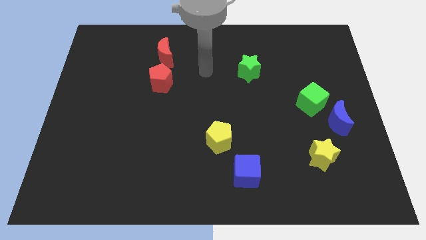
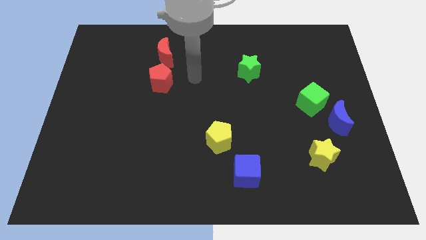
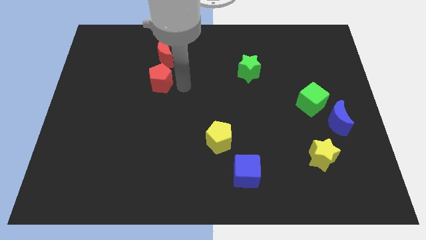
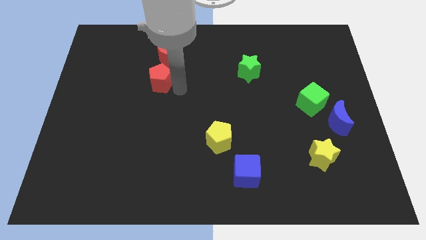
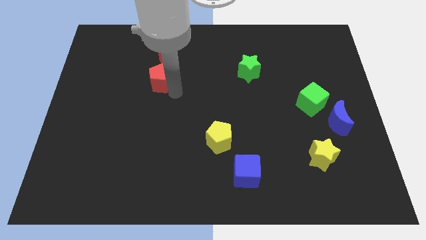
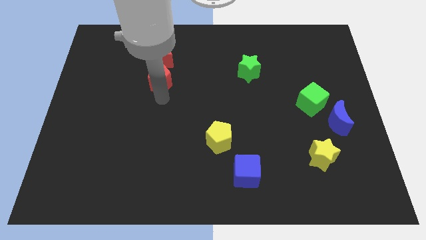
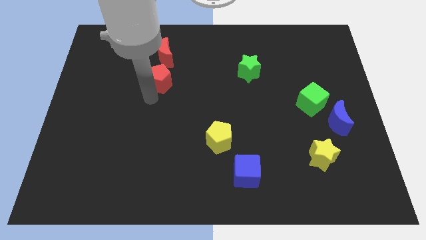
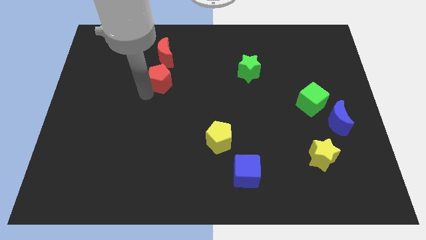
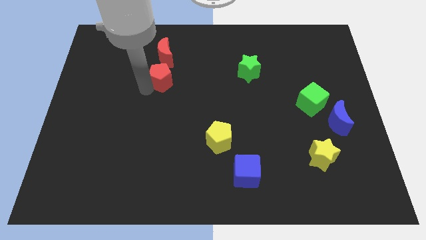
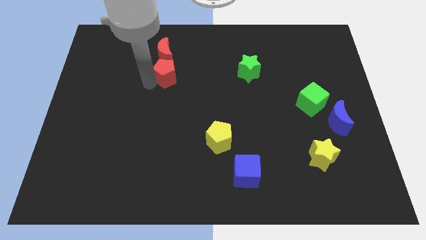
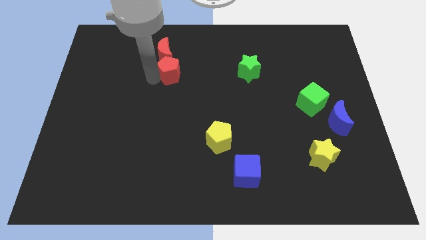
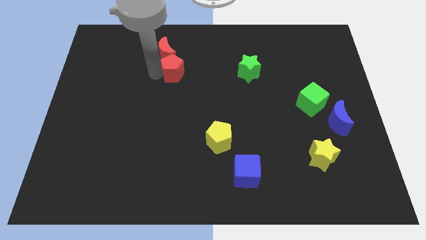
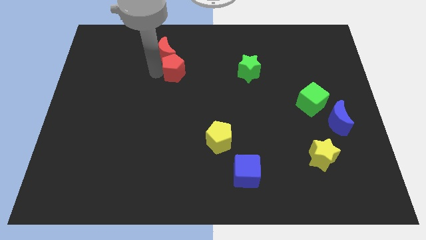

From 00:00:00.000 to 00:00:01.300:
push the red pentagon into the red moon

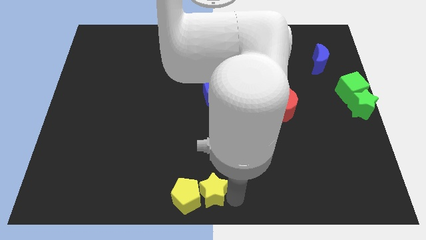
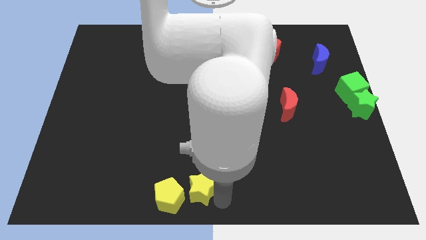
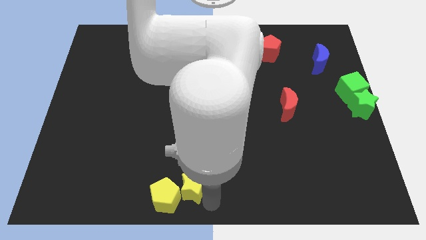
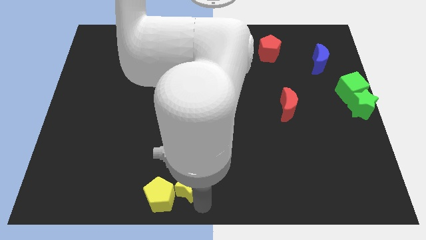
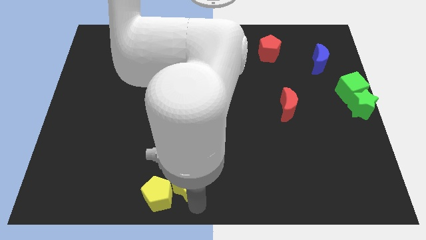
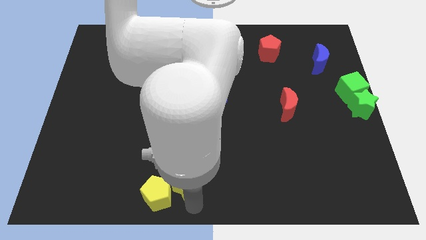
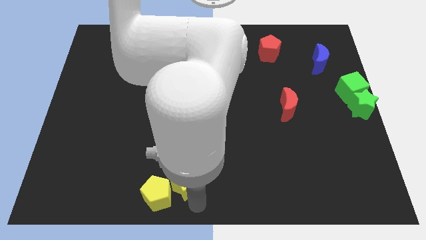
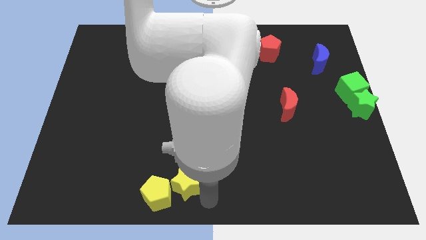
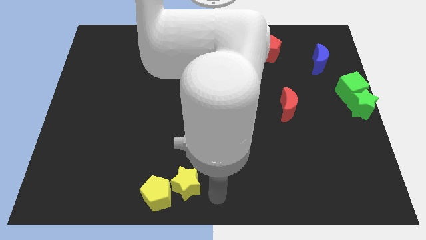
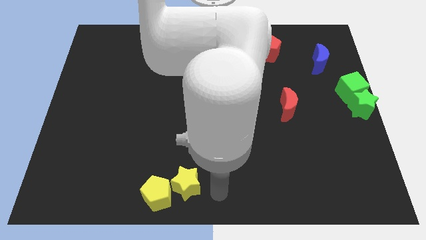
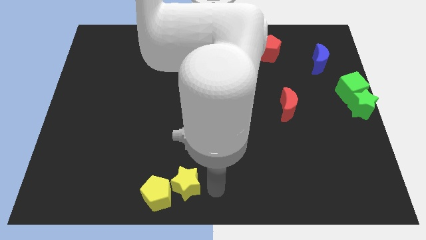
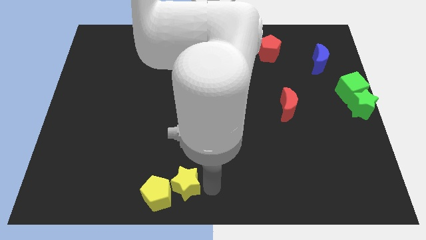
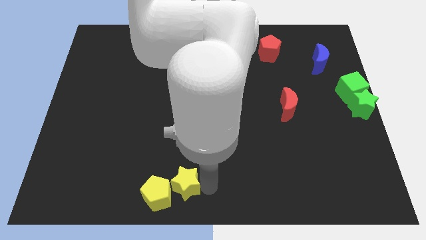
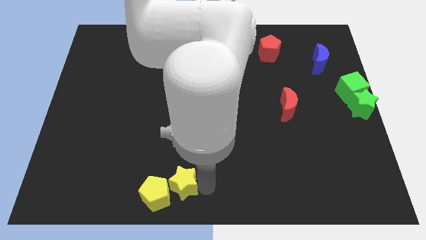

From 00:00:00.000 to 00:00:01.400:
push yellow star along with yellow pentagon slightly to the left

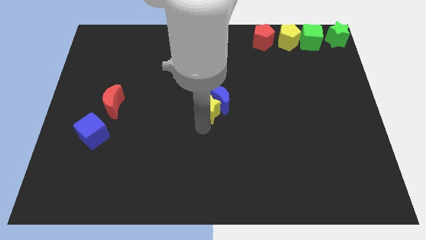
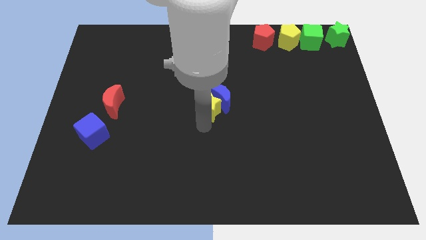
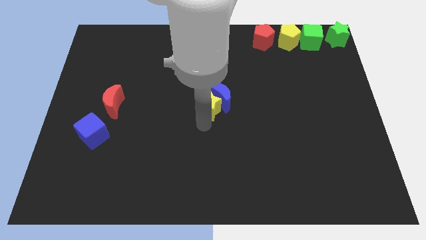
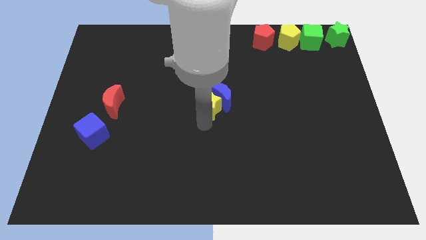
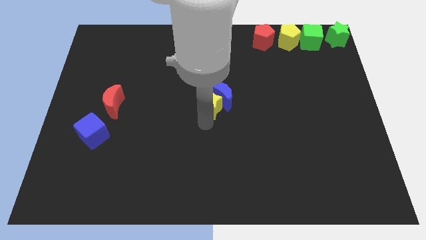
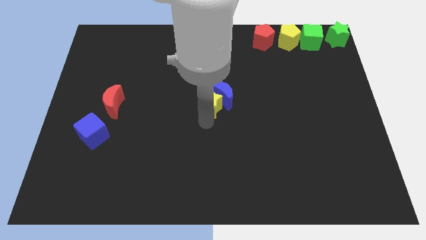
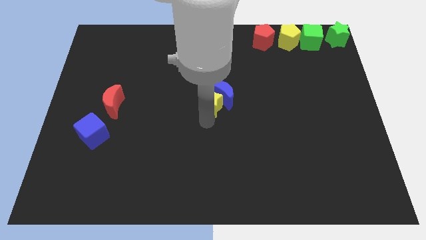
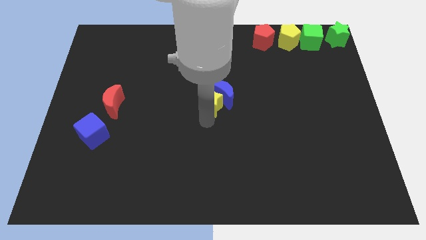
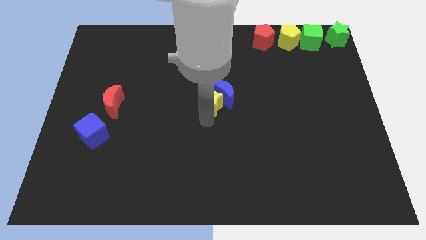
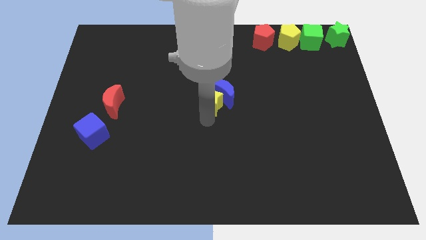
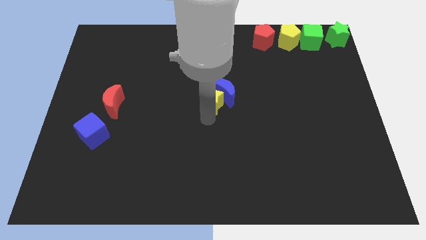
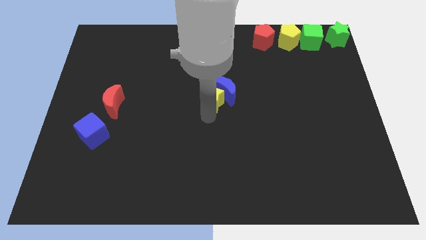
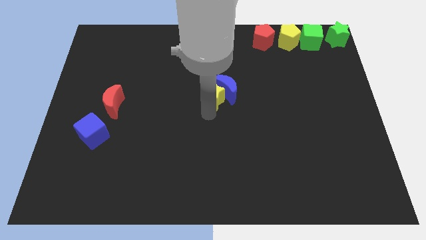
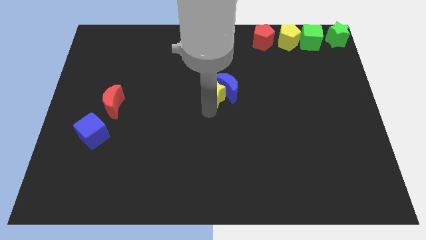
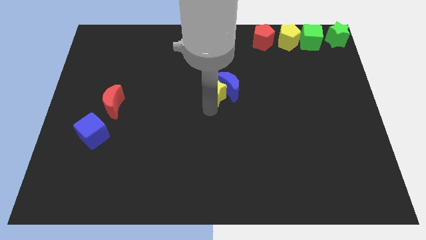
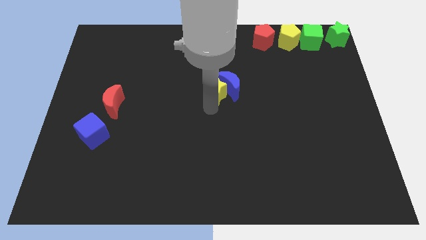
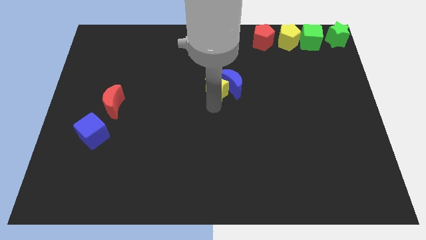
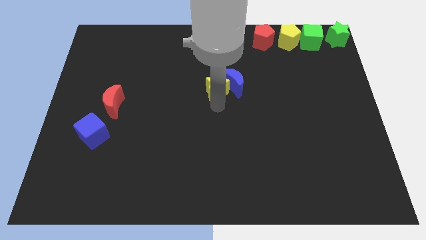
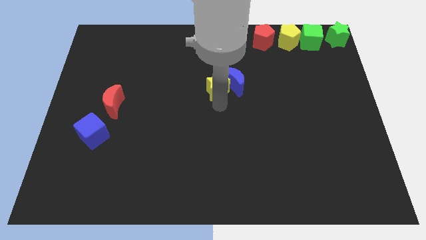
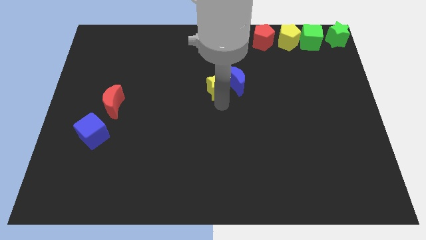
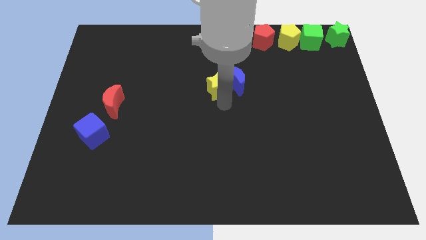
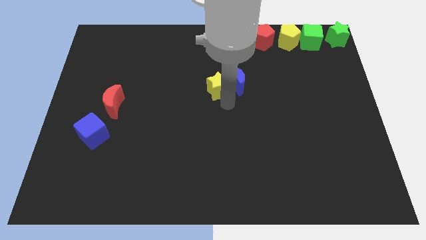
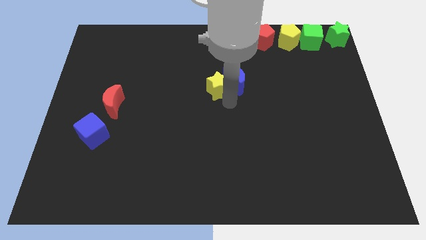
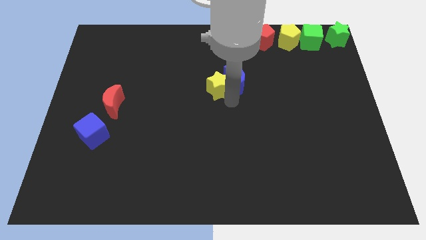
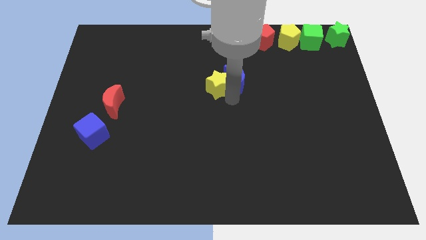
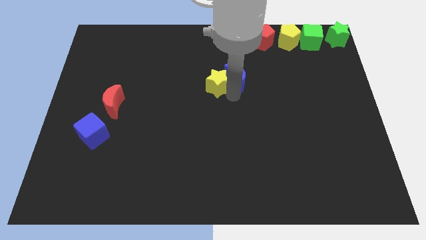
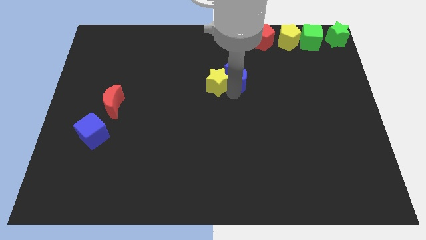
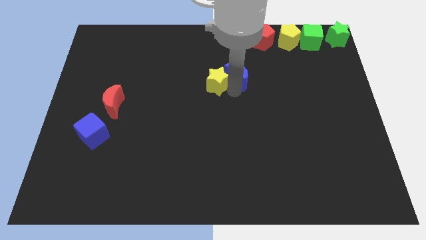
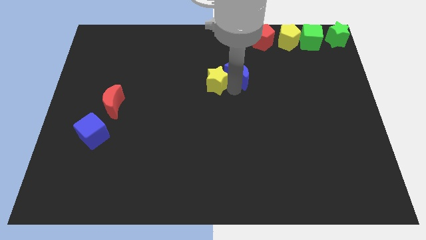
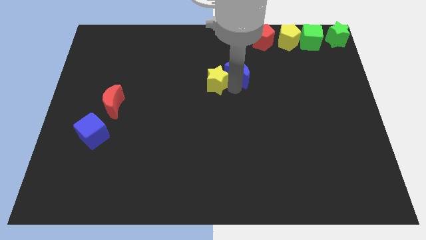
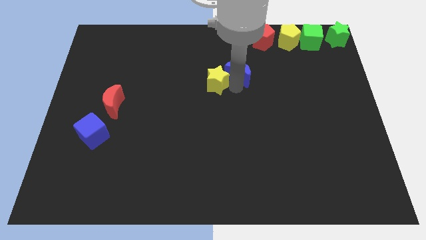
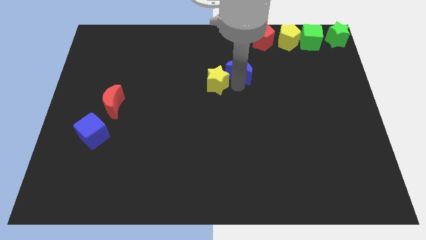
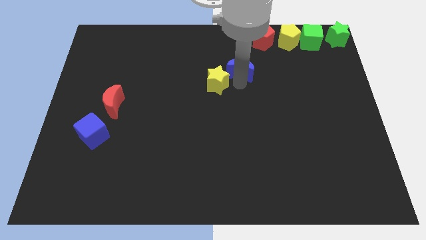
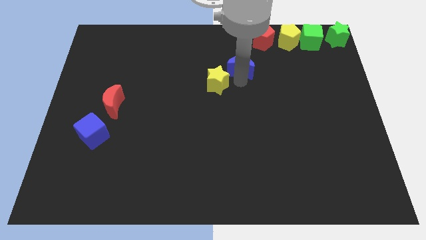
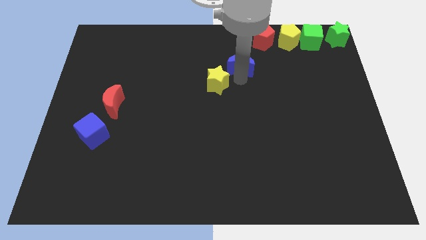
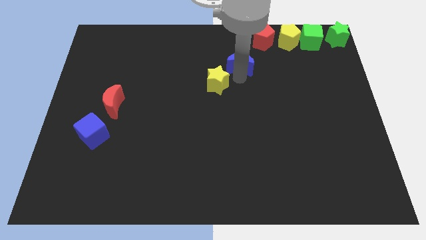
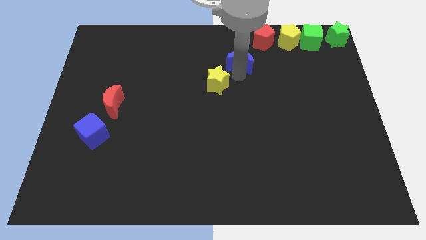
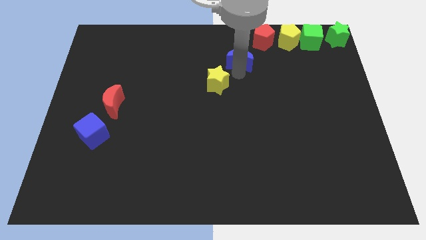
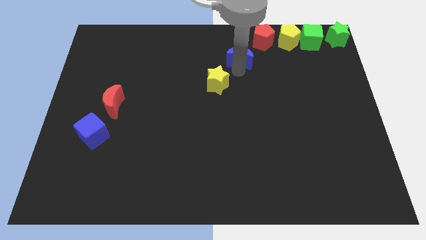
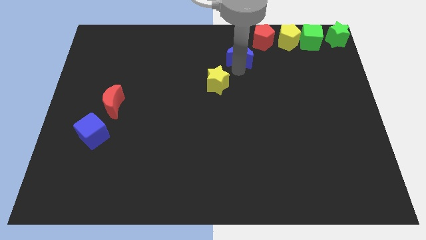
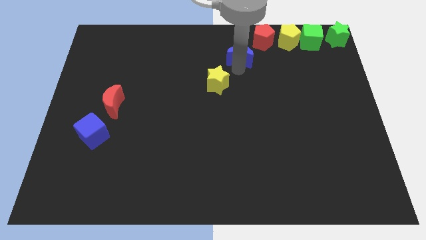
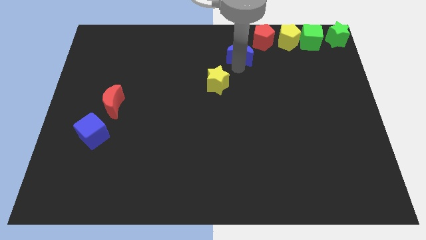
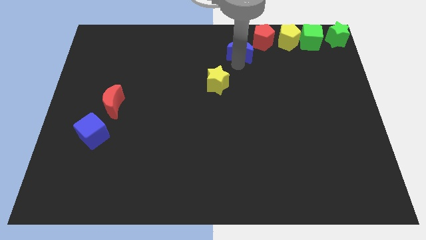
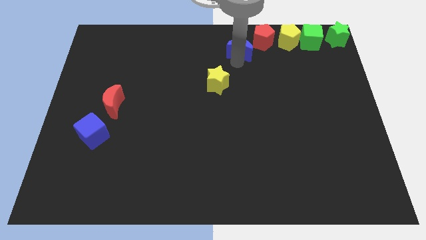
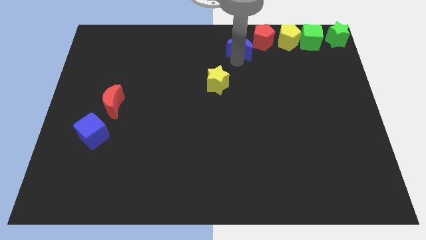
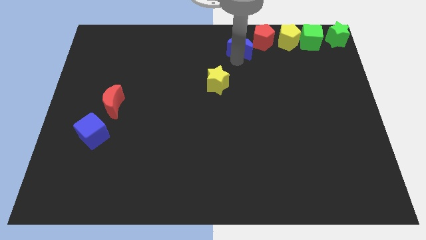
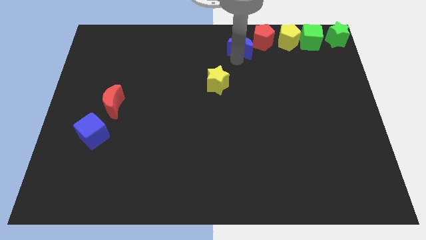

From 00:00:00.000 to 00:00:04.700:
separate blue moon from the yellow star

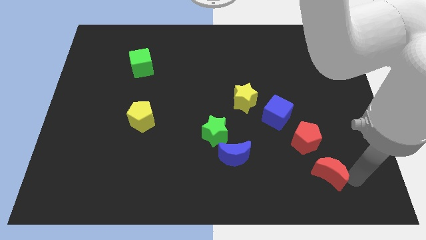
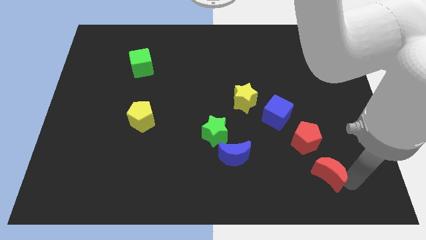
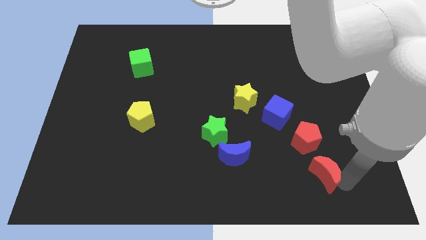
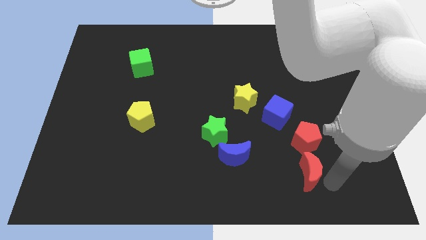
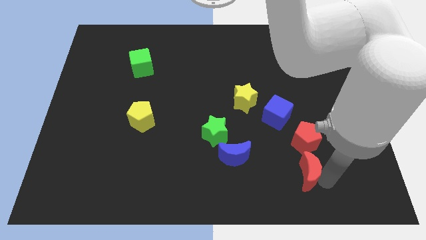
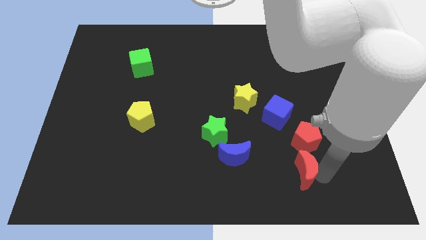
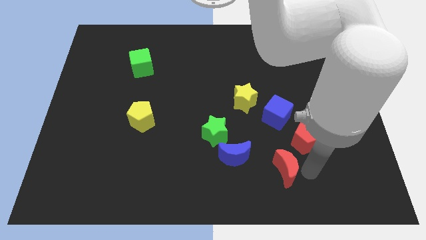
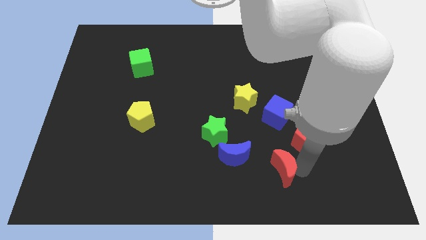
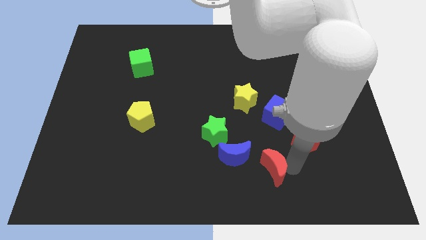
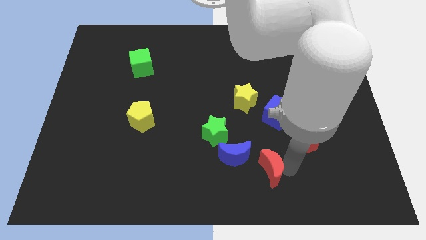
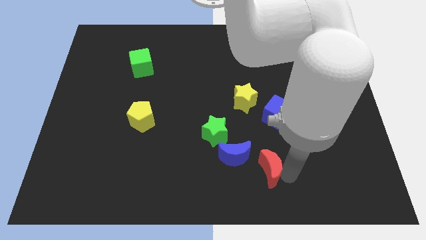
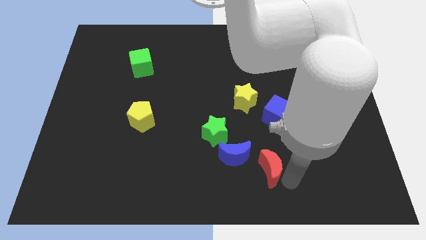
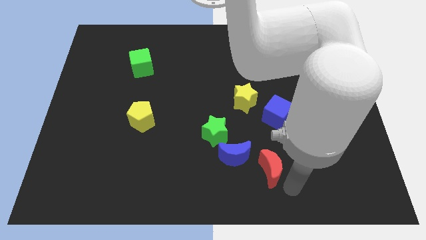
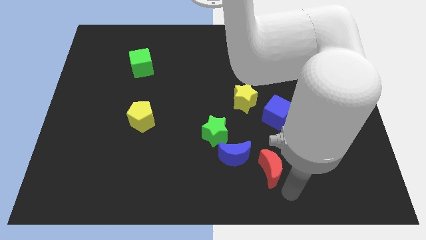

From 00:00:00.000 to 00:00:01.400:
push the red crescent towards the blue crescent
